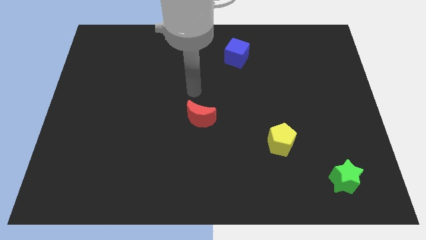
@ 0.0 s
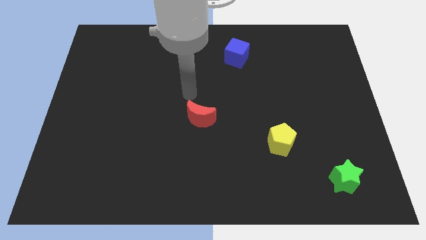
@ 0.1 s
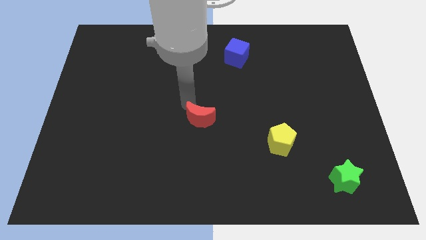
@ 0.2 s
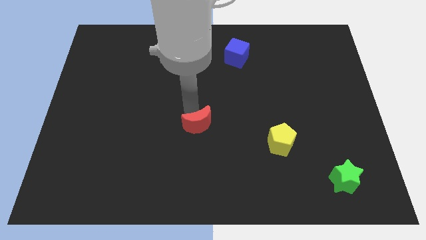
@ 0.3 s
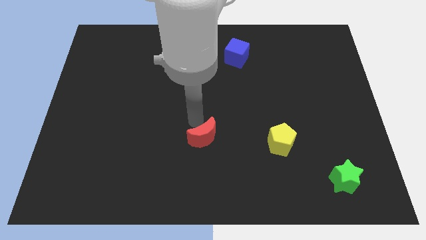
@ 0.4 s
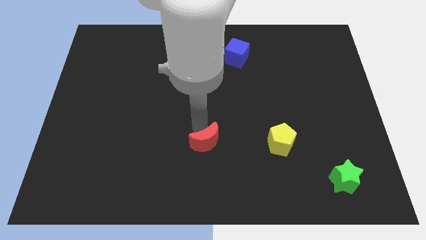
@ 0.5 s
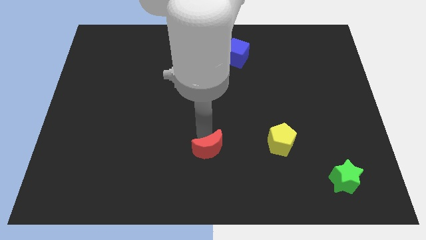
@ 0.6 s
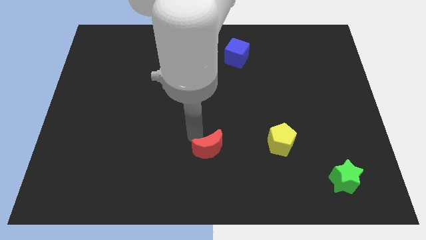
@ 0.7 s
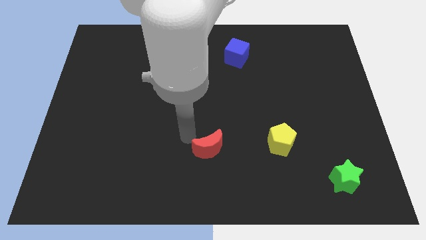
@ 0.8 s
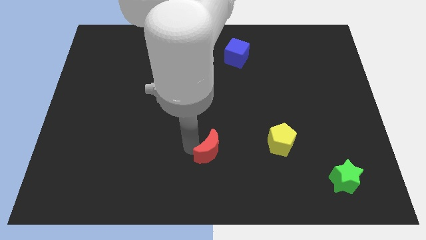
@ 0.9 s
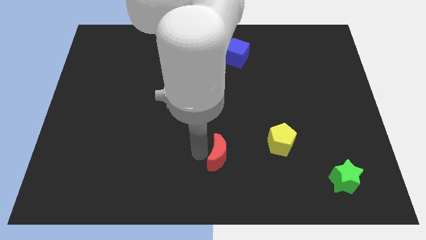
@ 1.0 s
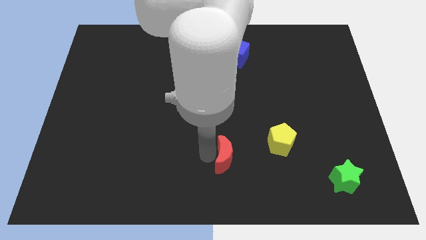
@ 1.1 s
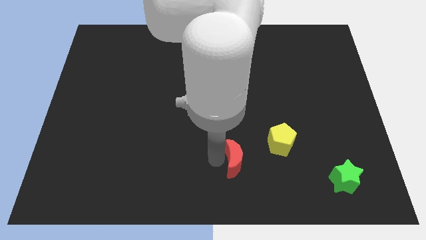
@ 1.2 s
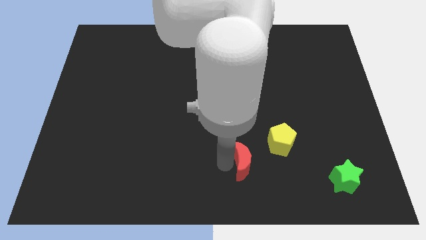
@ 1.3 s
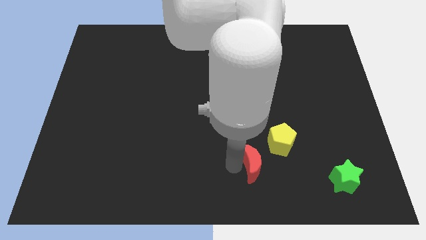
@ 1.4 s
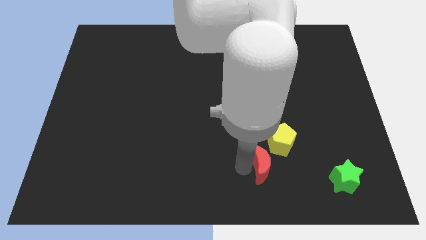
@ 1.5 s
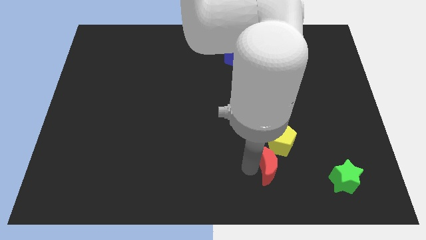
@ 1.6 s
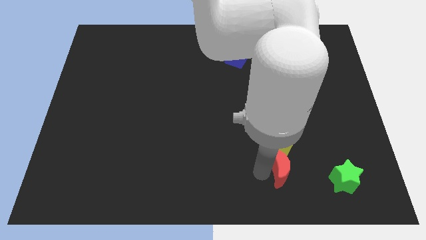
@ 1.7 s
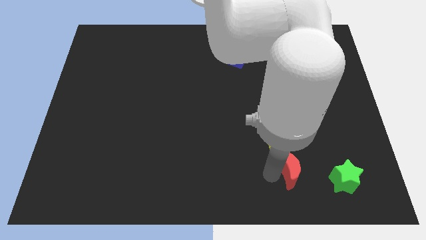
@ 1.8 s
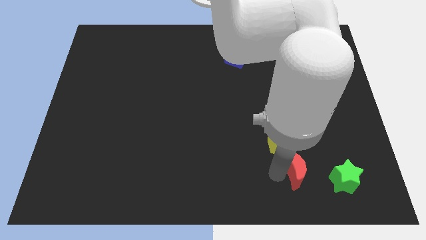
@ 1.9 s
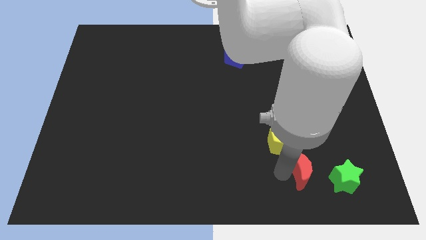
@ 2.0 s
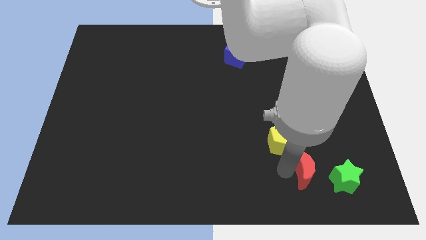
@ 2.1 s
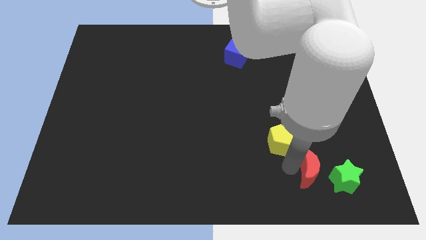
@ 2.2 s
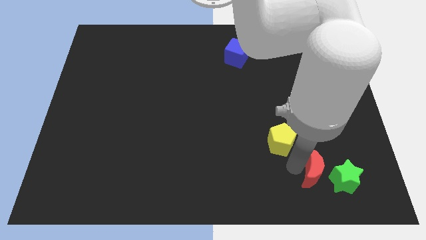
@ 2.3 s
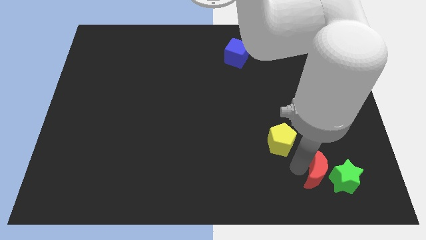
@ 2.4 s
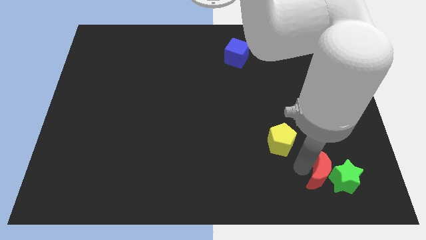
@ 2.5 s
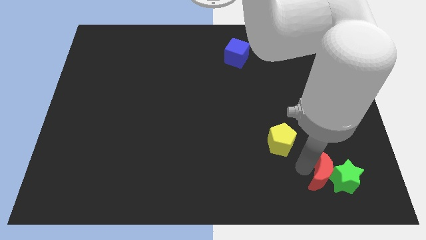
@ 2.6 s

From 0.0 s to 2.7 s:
push the red block close to the green block

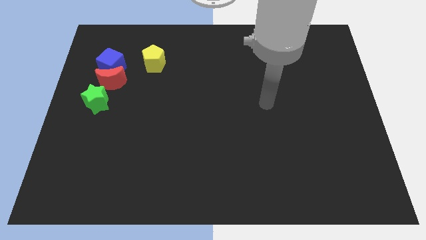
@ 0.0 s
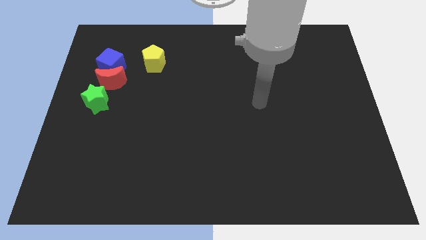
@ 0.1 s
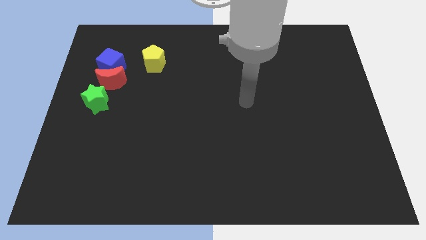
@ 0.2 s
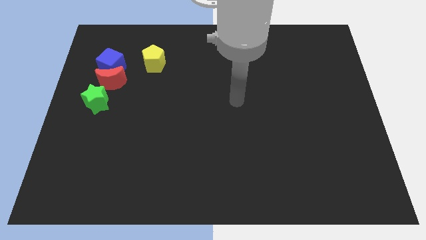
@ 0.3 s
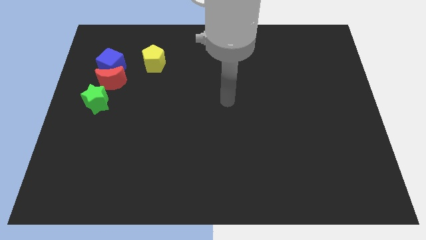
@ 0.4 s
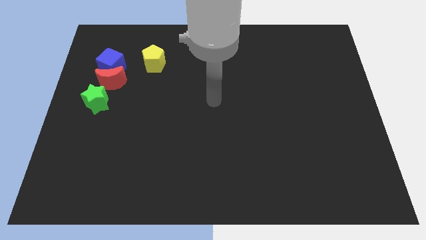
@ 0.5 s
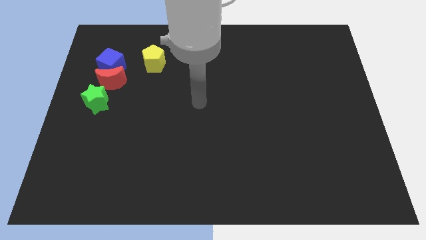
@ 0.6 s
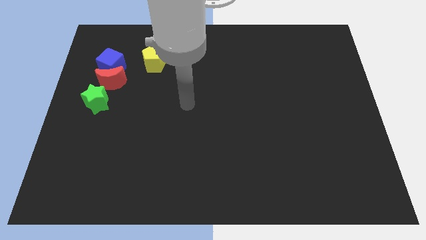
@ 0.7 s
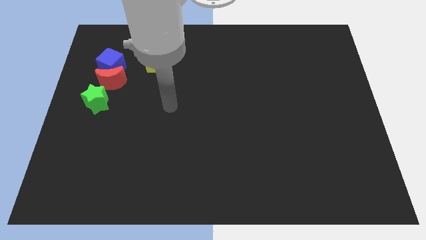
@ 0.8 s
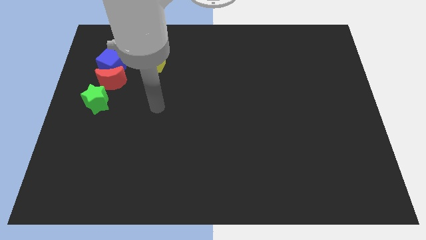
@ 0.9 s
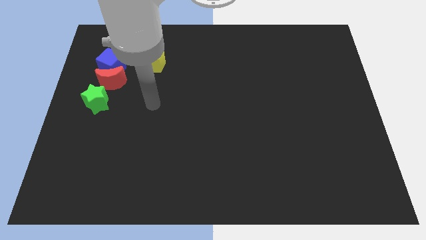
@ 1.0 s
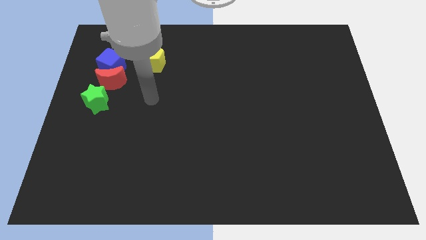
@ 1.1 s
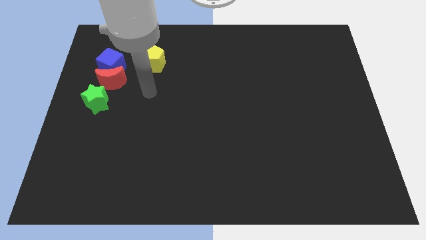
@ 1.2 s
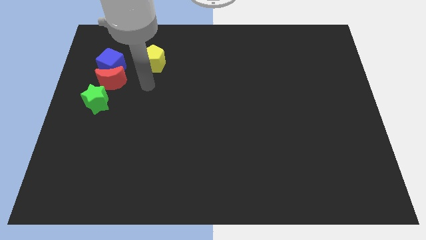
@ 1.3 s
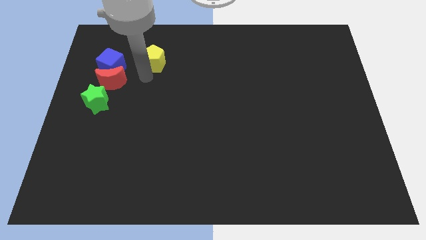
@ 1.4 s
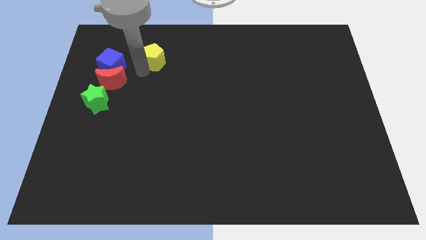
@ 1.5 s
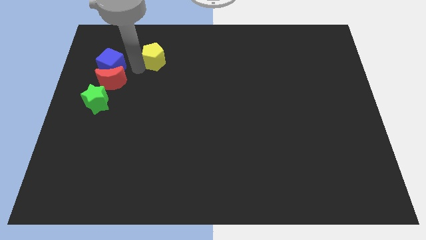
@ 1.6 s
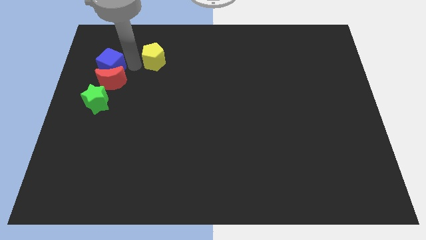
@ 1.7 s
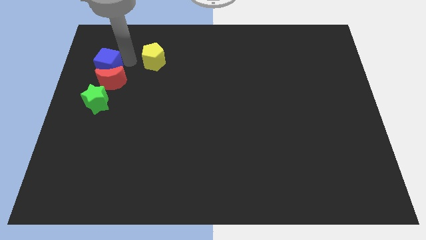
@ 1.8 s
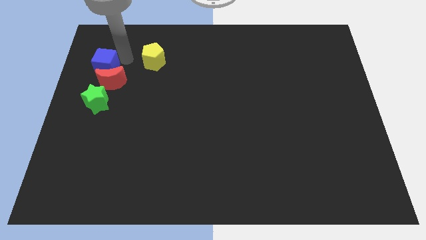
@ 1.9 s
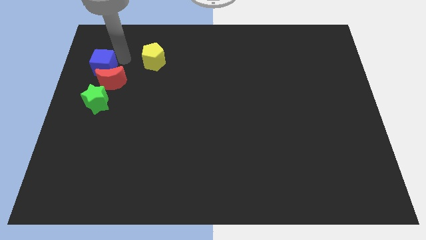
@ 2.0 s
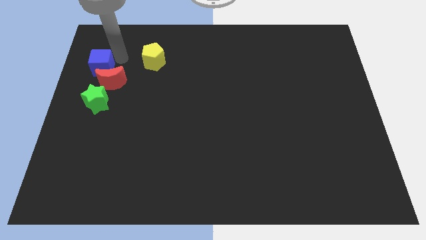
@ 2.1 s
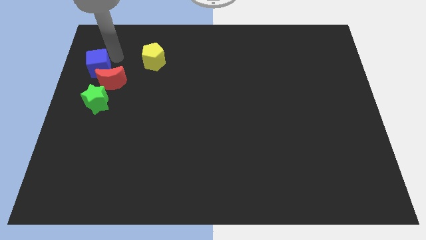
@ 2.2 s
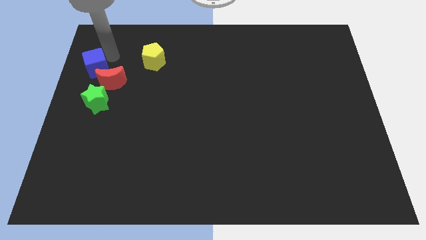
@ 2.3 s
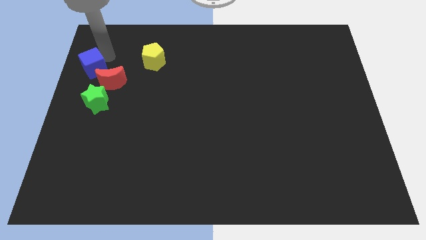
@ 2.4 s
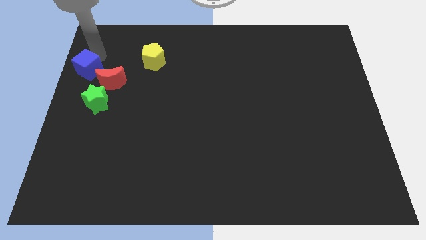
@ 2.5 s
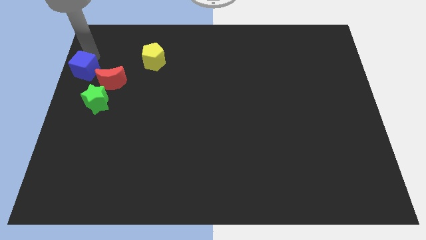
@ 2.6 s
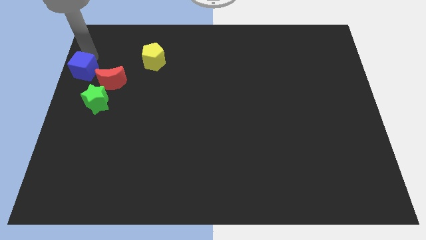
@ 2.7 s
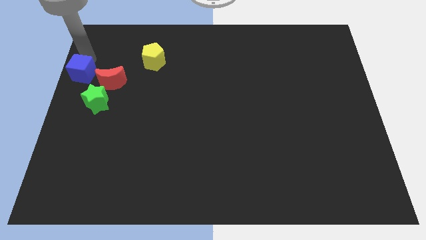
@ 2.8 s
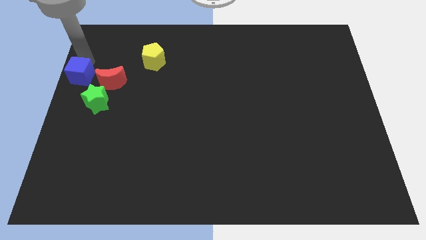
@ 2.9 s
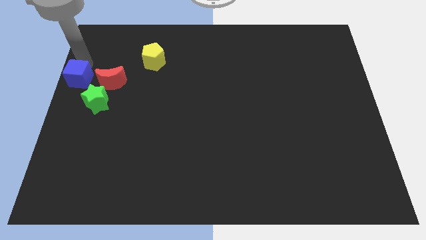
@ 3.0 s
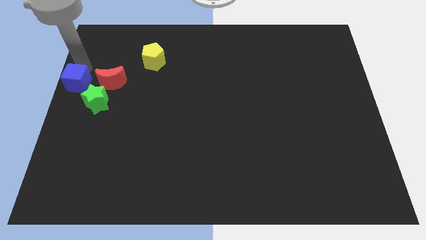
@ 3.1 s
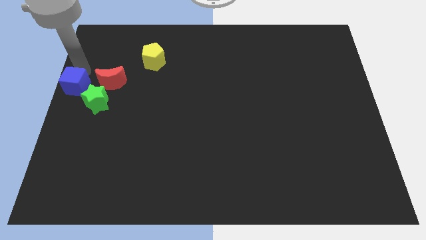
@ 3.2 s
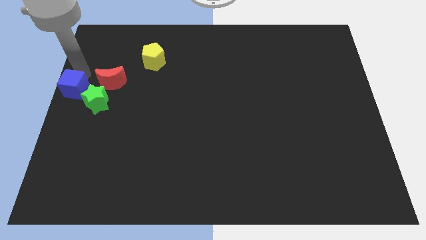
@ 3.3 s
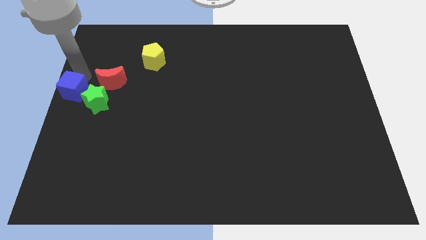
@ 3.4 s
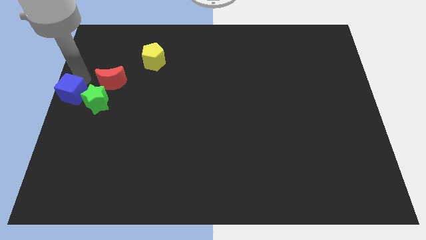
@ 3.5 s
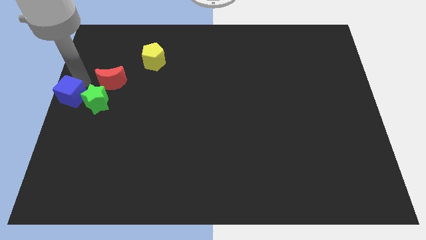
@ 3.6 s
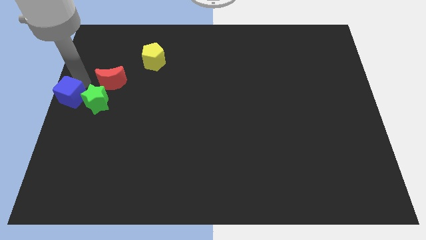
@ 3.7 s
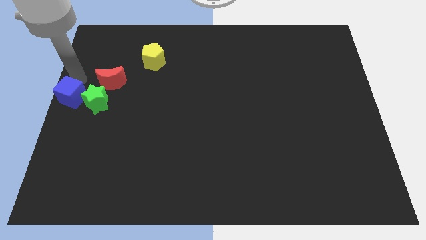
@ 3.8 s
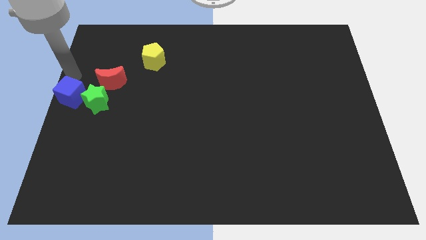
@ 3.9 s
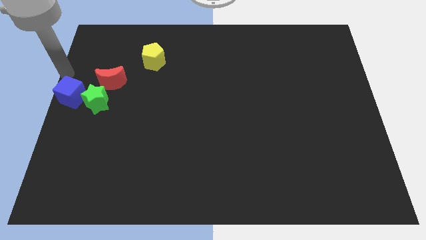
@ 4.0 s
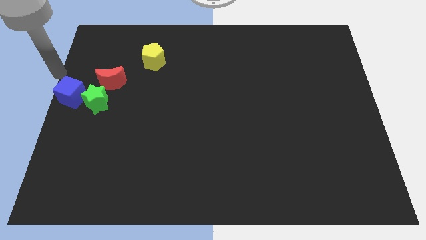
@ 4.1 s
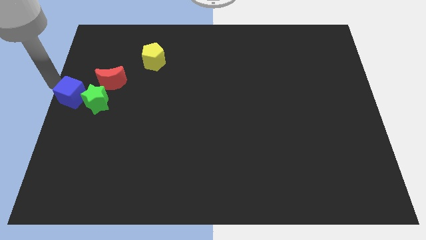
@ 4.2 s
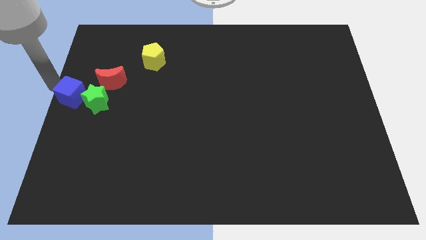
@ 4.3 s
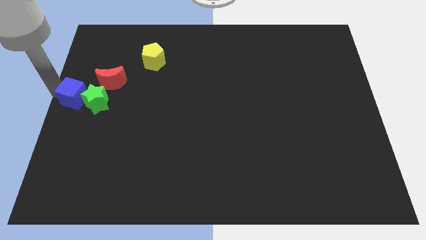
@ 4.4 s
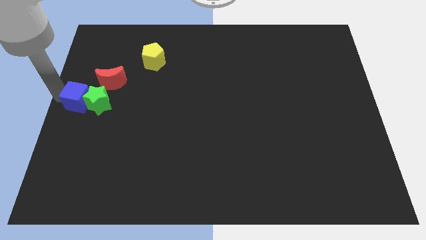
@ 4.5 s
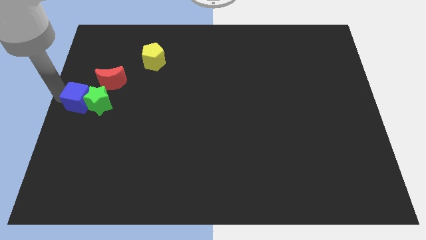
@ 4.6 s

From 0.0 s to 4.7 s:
push the blue cube towards the green block

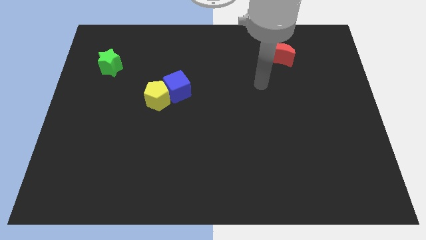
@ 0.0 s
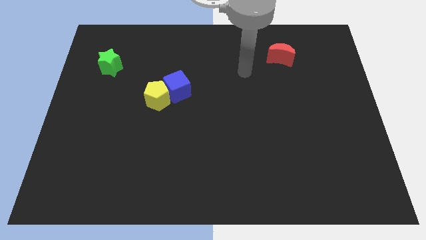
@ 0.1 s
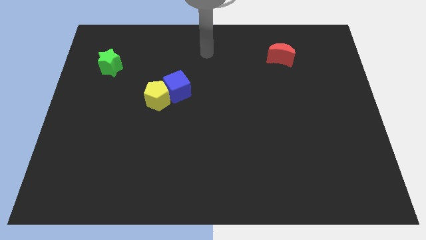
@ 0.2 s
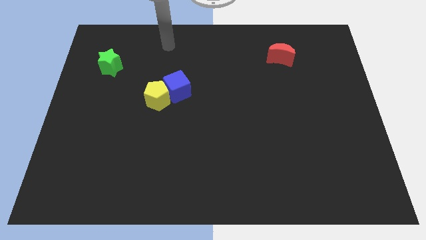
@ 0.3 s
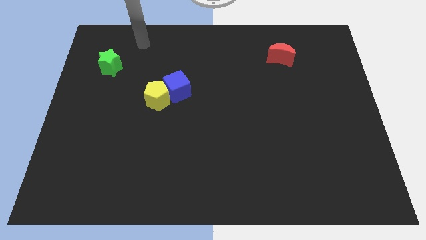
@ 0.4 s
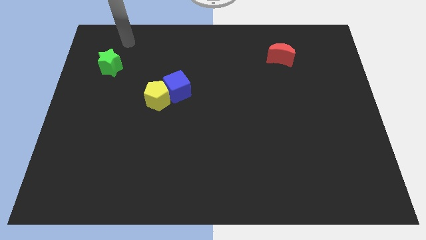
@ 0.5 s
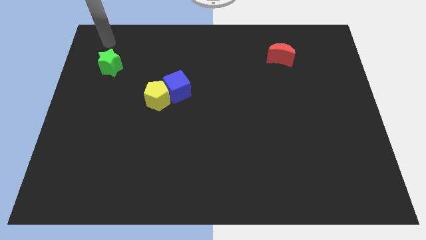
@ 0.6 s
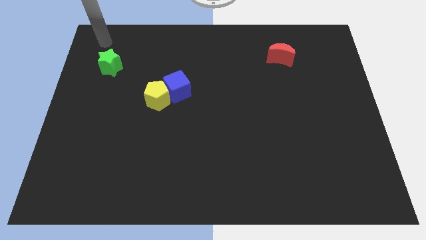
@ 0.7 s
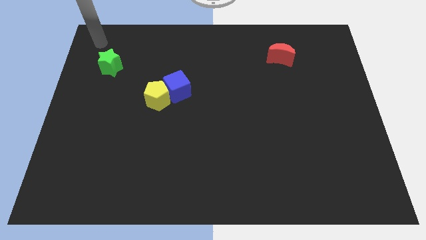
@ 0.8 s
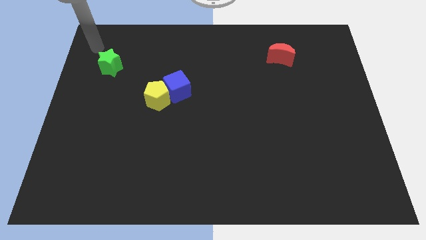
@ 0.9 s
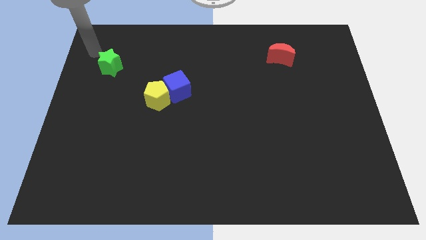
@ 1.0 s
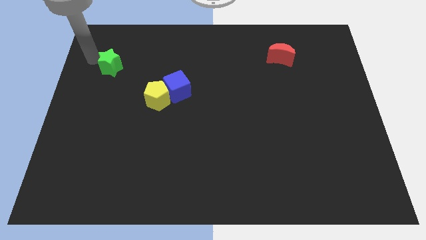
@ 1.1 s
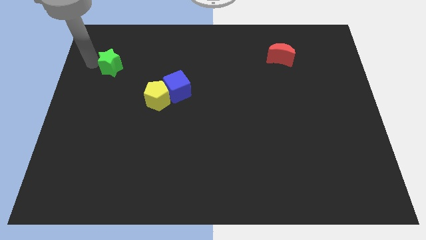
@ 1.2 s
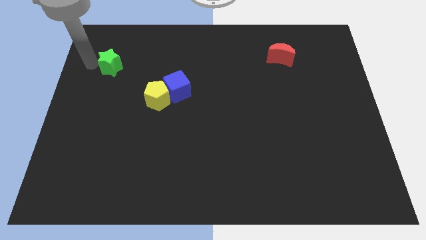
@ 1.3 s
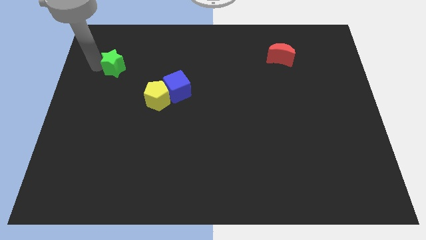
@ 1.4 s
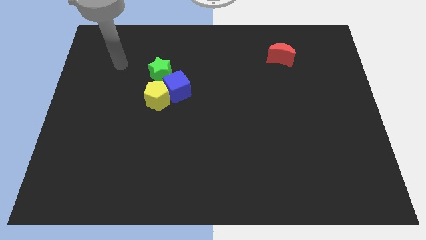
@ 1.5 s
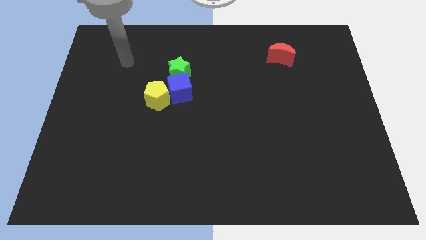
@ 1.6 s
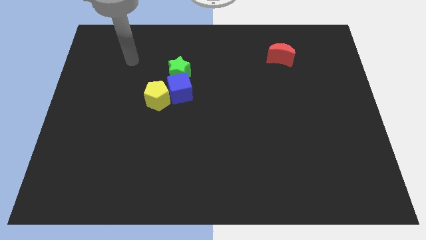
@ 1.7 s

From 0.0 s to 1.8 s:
put the green block close to the blue block
